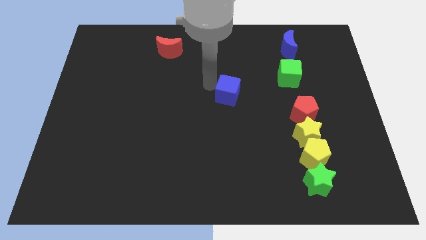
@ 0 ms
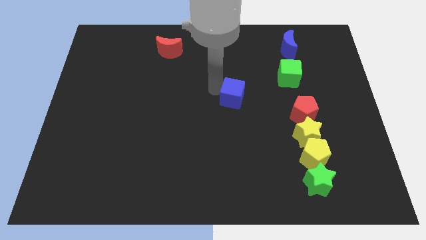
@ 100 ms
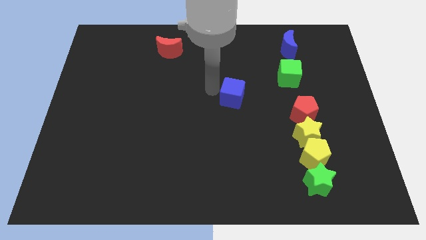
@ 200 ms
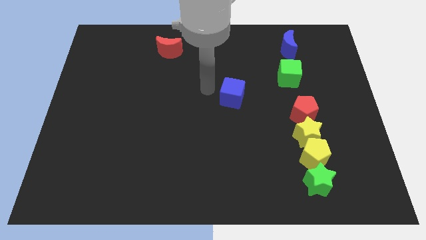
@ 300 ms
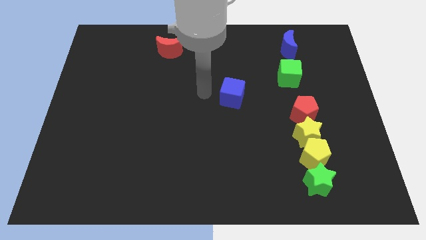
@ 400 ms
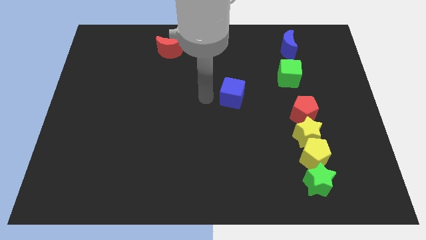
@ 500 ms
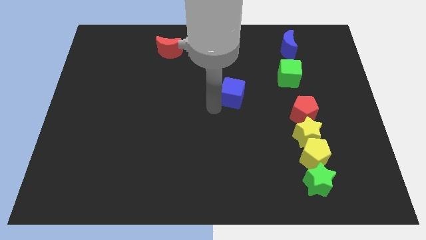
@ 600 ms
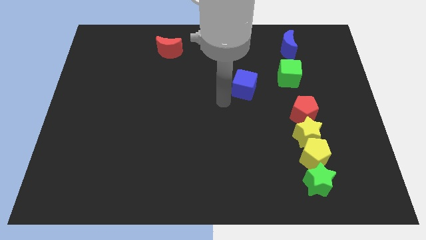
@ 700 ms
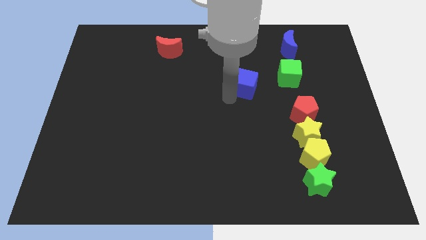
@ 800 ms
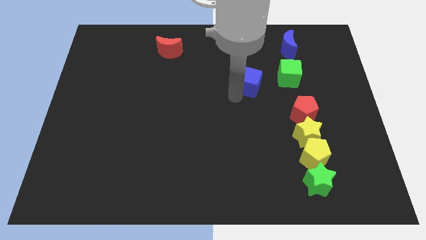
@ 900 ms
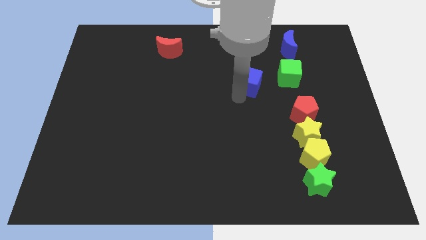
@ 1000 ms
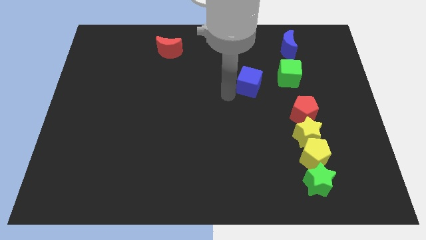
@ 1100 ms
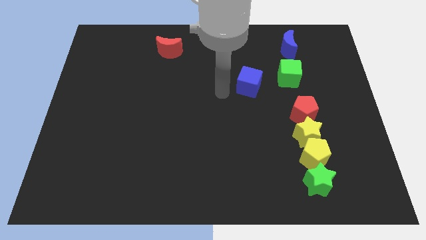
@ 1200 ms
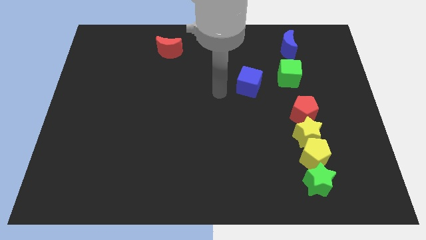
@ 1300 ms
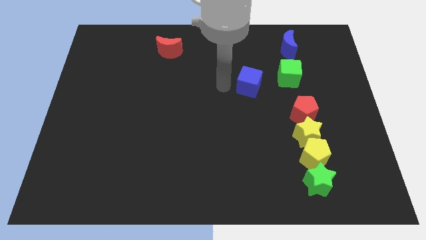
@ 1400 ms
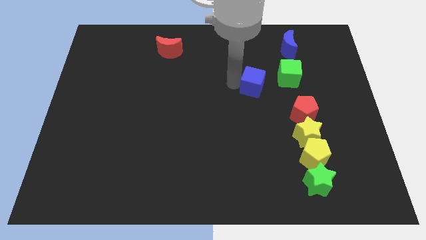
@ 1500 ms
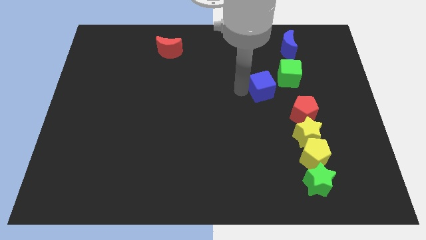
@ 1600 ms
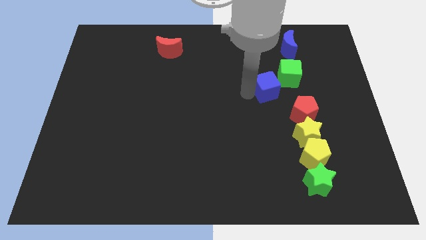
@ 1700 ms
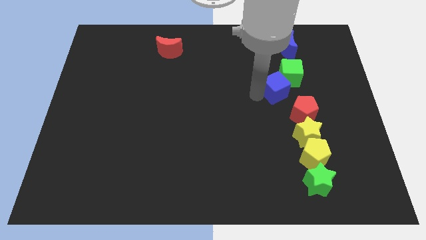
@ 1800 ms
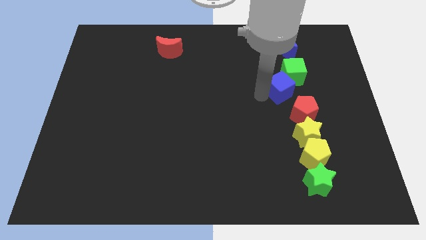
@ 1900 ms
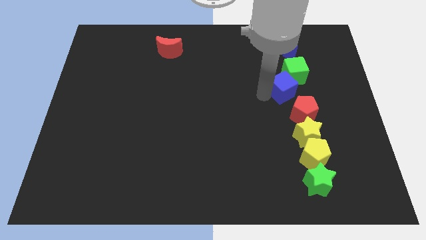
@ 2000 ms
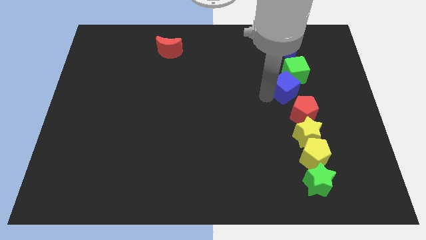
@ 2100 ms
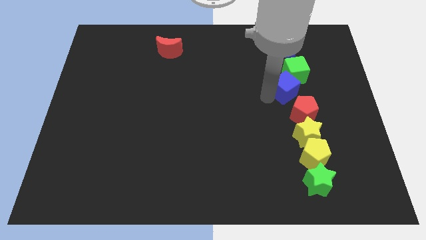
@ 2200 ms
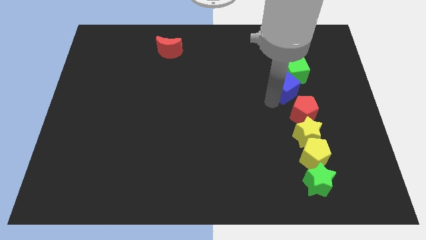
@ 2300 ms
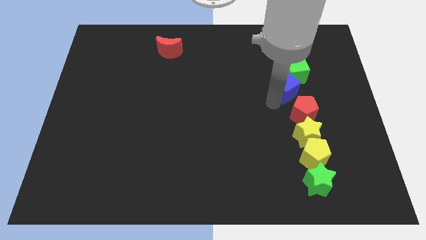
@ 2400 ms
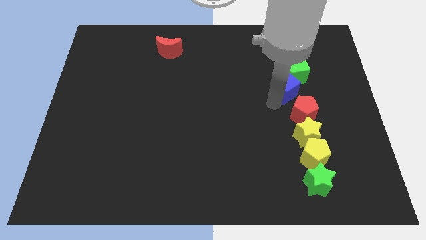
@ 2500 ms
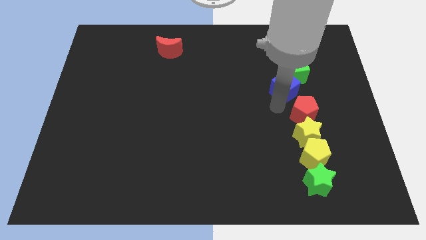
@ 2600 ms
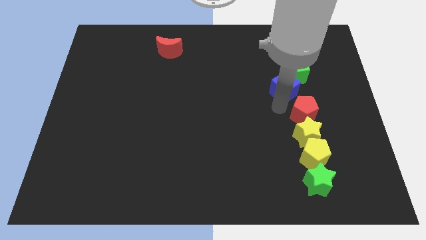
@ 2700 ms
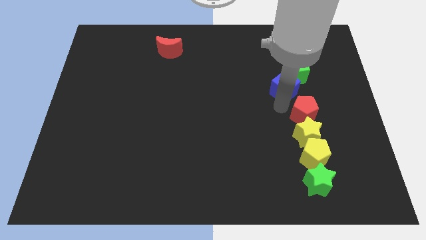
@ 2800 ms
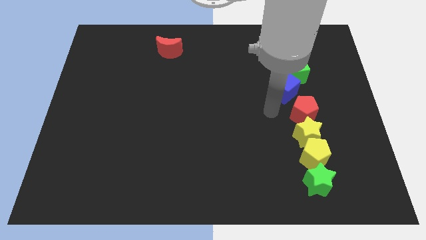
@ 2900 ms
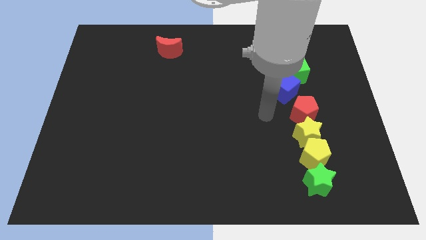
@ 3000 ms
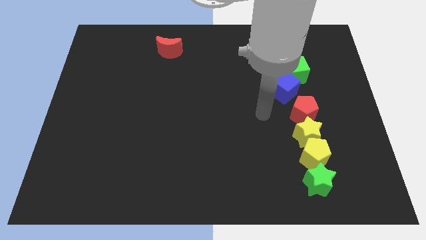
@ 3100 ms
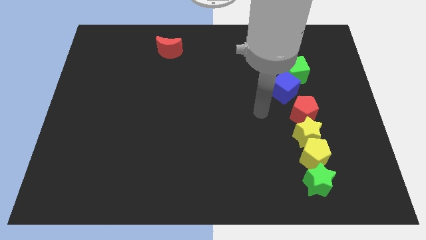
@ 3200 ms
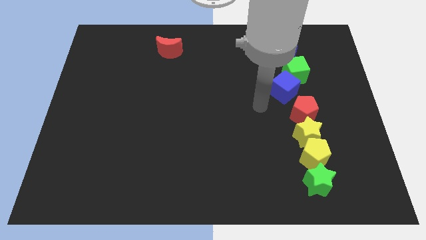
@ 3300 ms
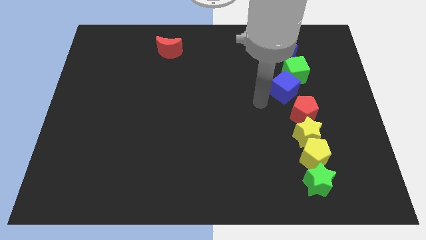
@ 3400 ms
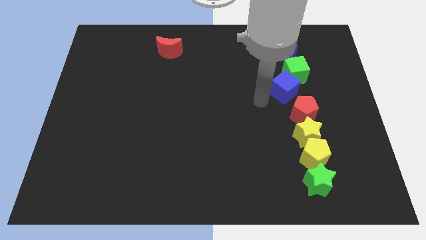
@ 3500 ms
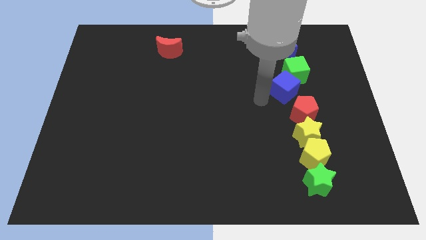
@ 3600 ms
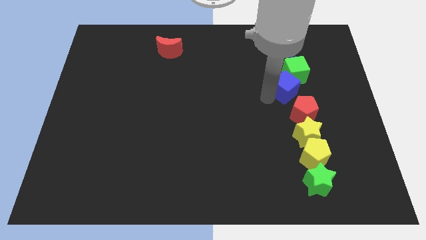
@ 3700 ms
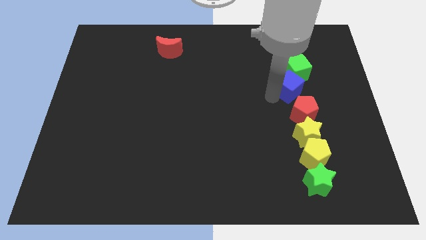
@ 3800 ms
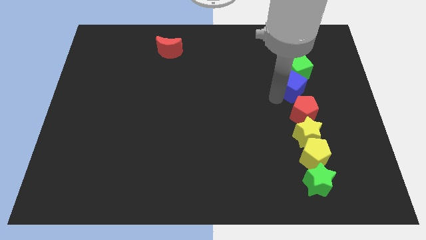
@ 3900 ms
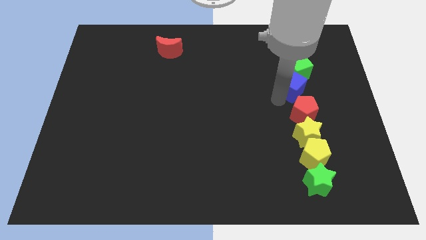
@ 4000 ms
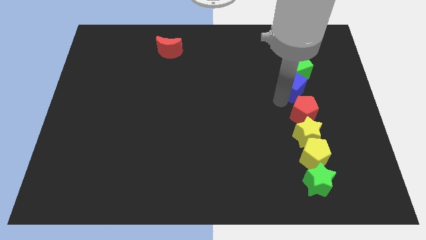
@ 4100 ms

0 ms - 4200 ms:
push the blue cube into the green cube

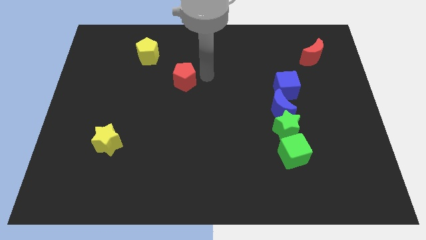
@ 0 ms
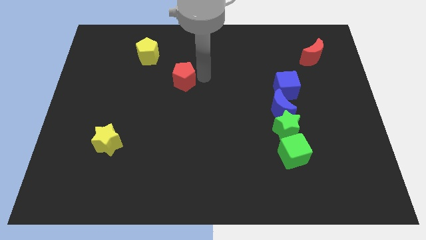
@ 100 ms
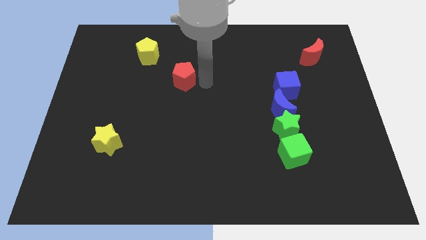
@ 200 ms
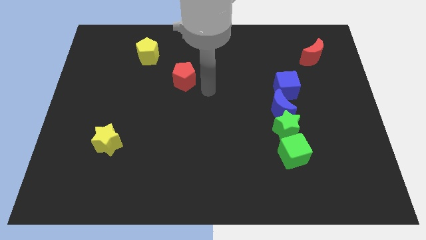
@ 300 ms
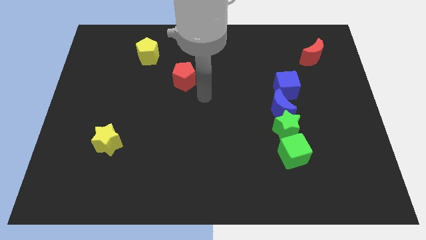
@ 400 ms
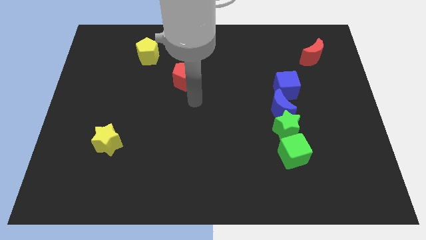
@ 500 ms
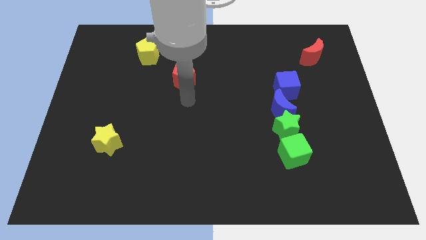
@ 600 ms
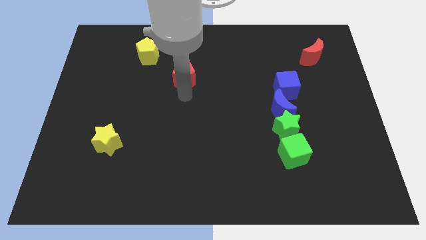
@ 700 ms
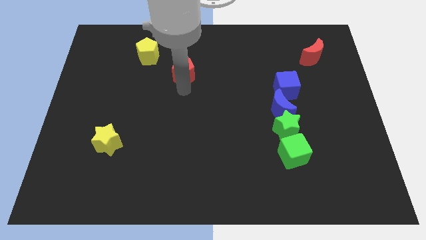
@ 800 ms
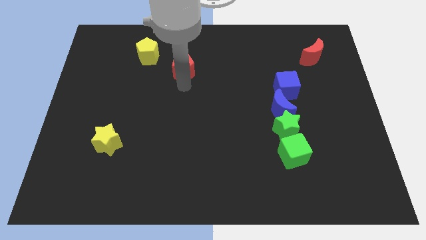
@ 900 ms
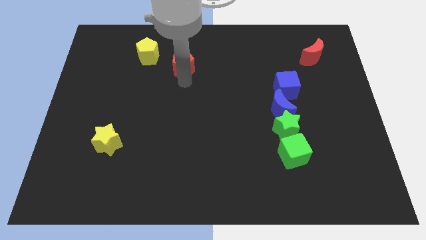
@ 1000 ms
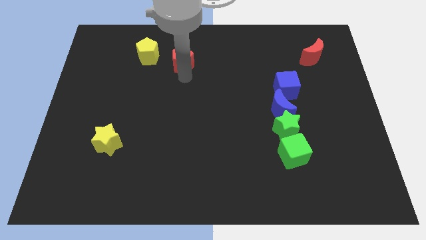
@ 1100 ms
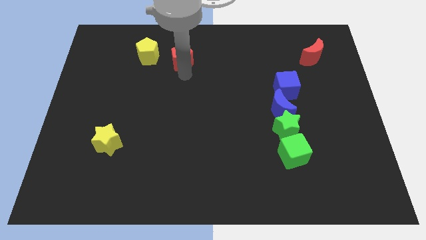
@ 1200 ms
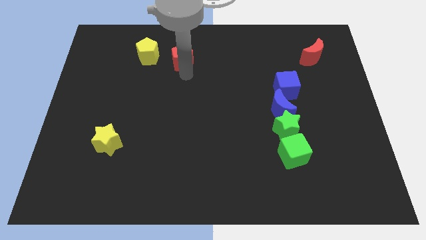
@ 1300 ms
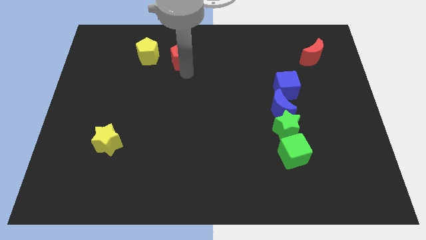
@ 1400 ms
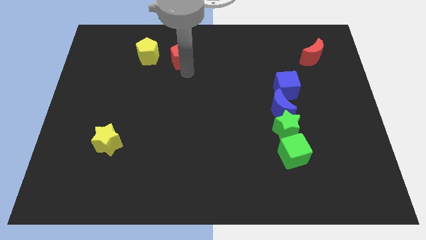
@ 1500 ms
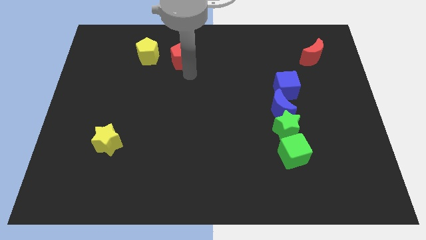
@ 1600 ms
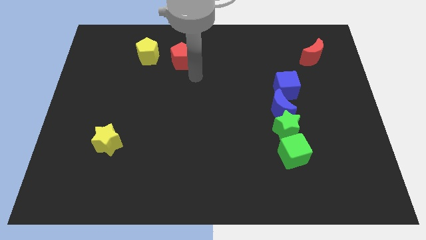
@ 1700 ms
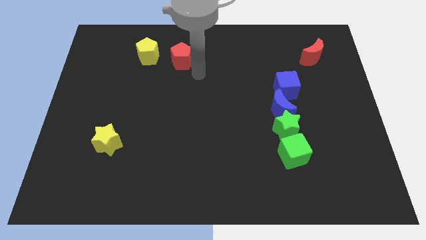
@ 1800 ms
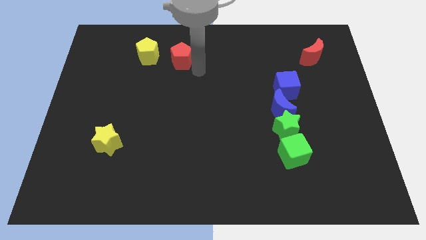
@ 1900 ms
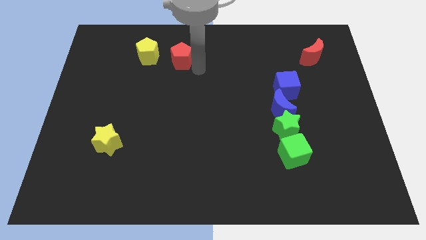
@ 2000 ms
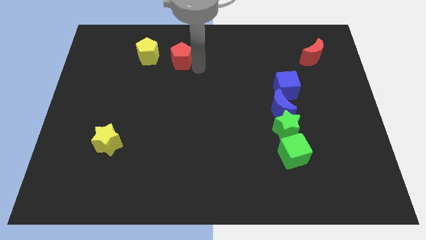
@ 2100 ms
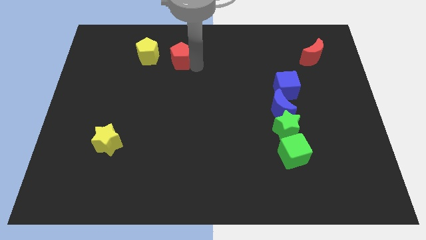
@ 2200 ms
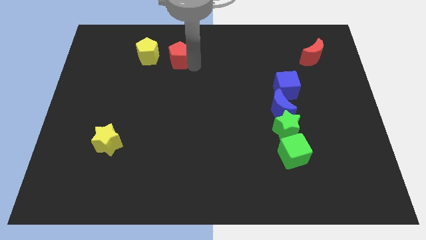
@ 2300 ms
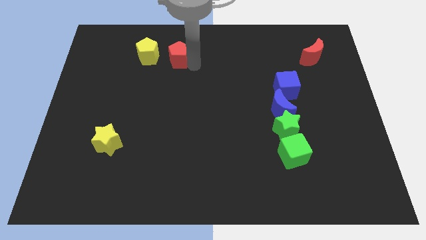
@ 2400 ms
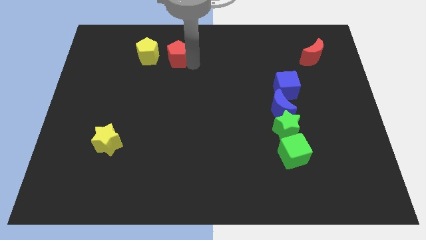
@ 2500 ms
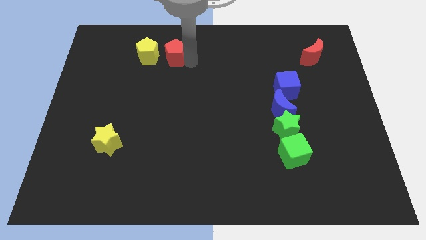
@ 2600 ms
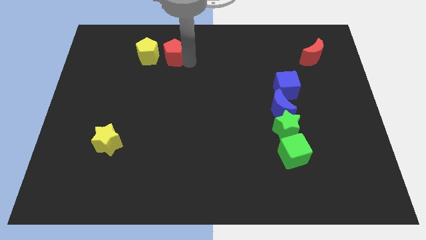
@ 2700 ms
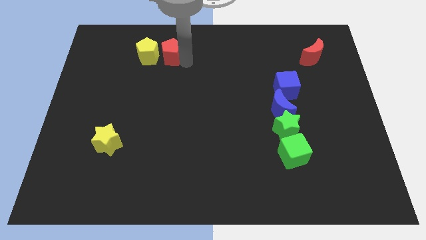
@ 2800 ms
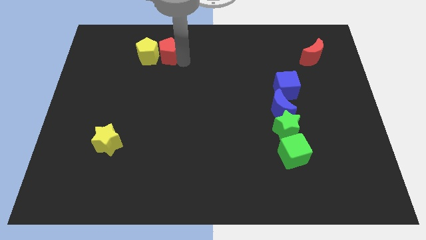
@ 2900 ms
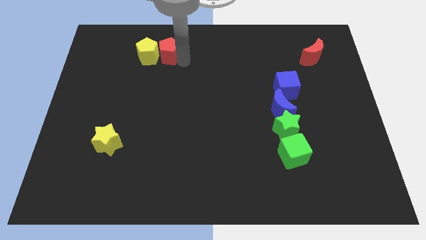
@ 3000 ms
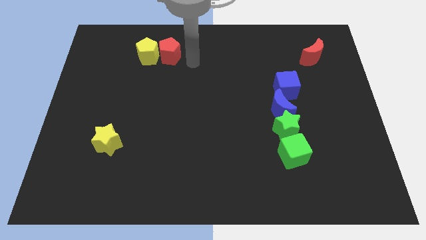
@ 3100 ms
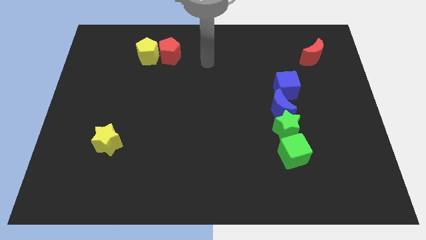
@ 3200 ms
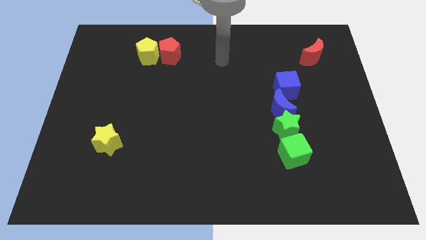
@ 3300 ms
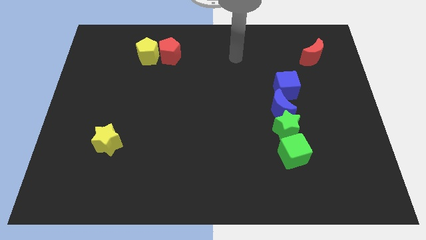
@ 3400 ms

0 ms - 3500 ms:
put the red pentagon parallel right to the yellow pentagon

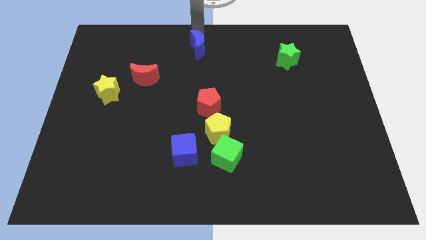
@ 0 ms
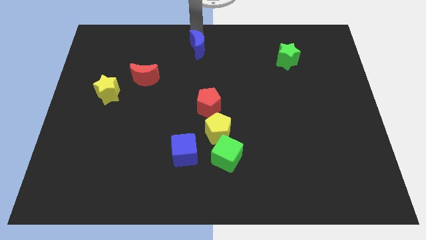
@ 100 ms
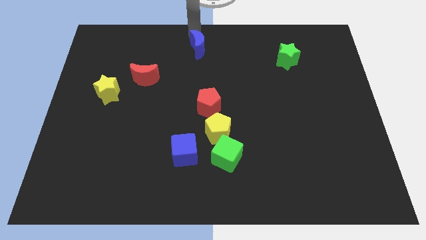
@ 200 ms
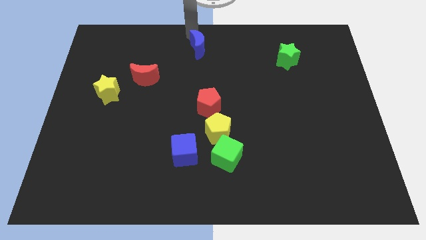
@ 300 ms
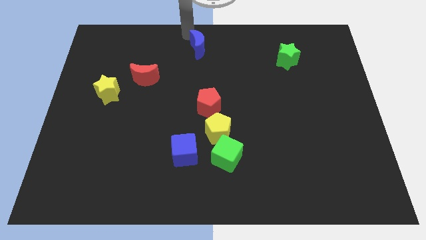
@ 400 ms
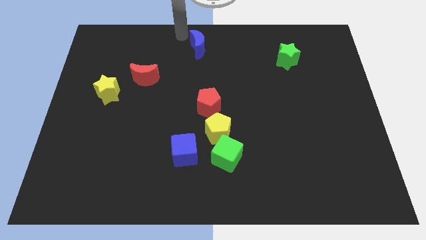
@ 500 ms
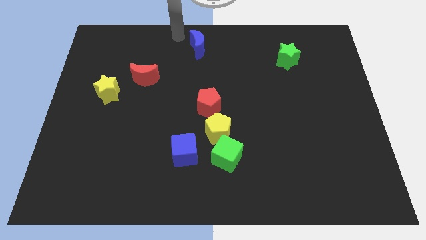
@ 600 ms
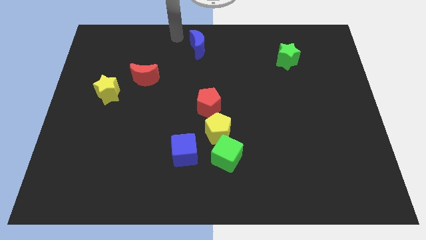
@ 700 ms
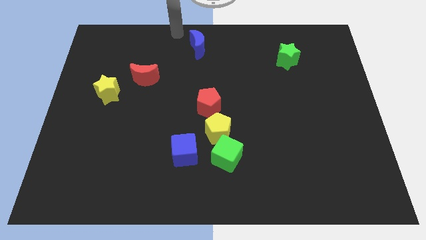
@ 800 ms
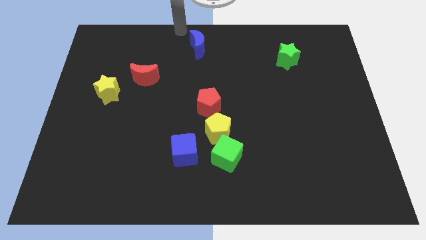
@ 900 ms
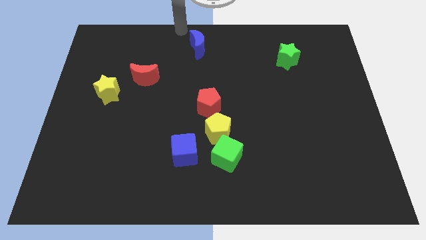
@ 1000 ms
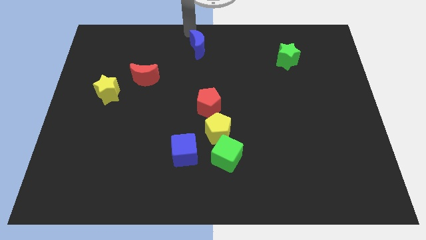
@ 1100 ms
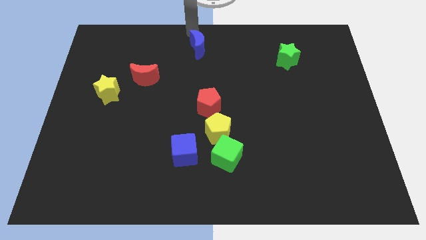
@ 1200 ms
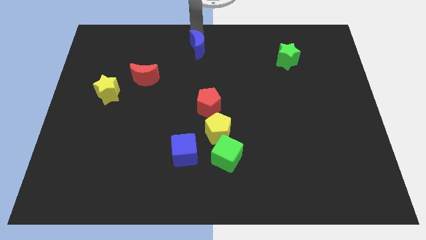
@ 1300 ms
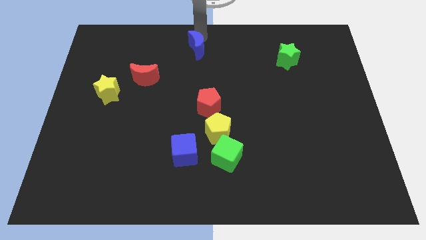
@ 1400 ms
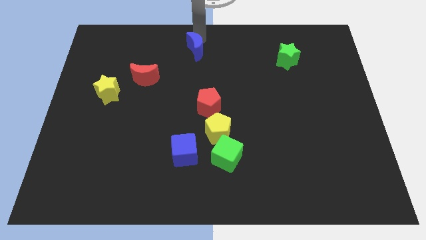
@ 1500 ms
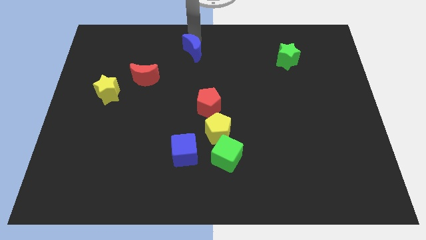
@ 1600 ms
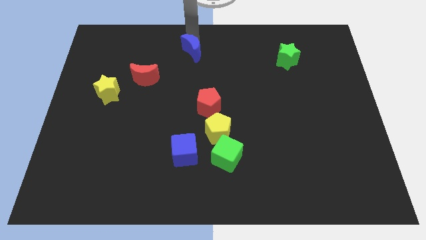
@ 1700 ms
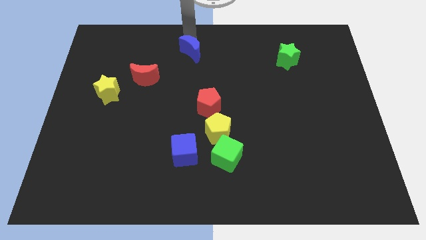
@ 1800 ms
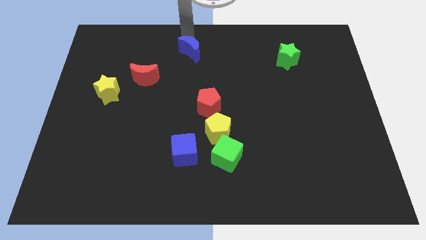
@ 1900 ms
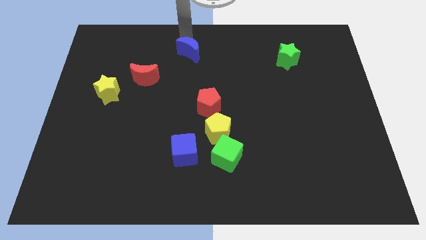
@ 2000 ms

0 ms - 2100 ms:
move the blue crescent slightly below
